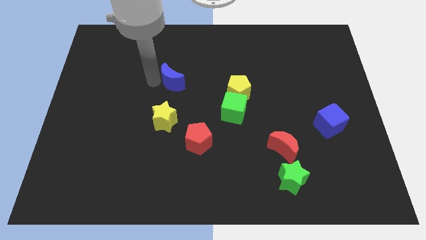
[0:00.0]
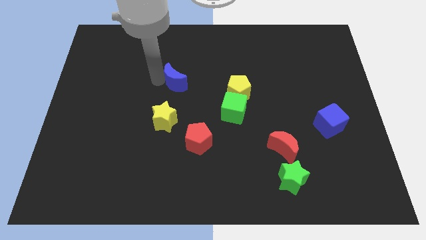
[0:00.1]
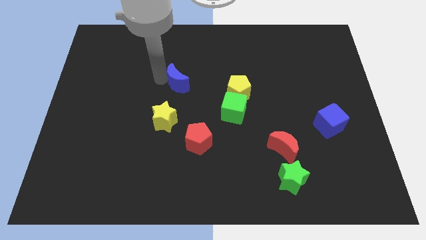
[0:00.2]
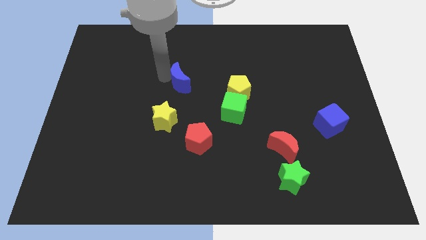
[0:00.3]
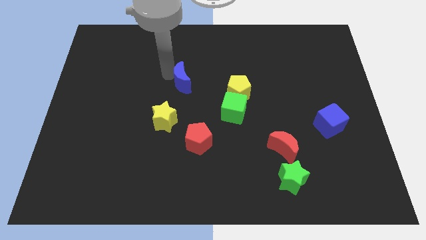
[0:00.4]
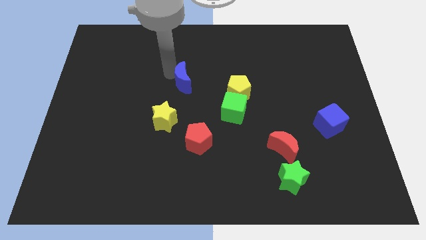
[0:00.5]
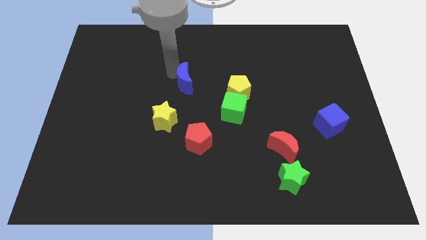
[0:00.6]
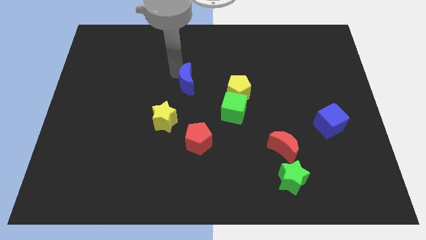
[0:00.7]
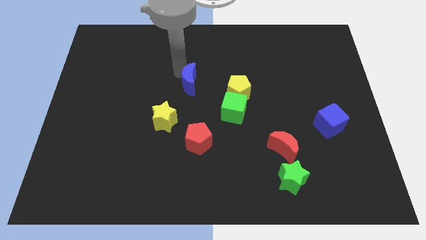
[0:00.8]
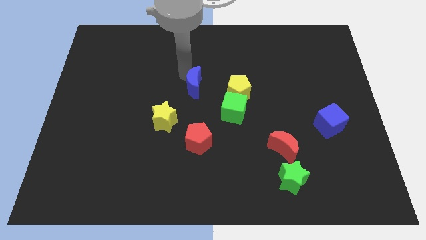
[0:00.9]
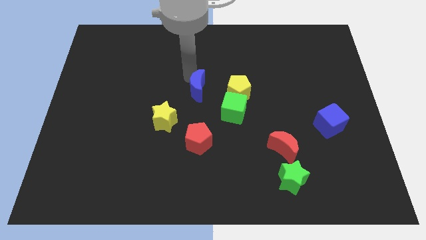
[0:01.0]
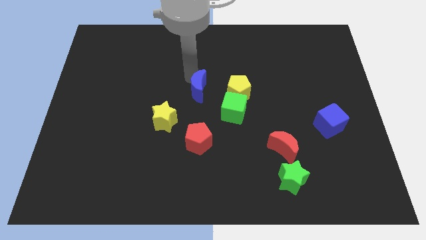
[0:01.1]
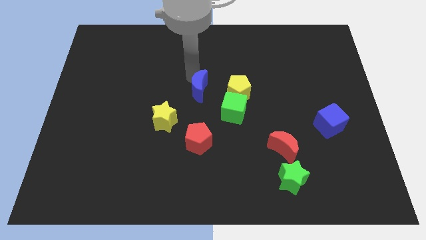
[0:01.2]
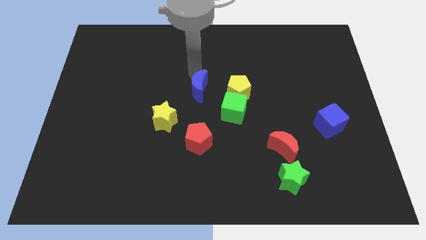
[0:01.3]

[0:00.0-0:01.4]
move the blue crescent diagonally top right to the yellow star

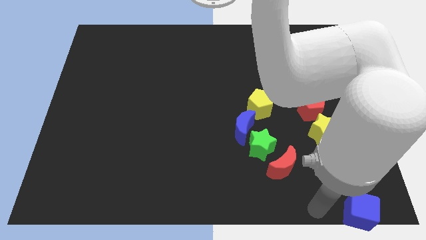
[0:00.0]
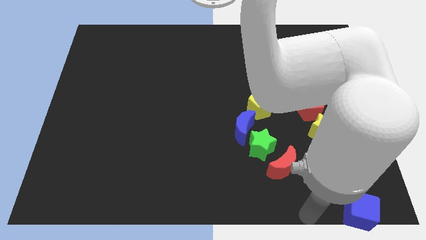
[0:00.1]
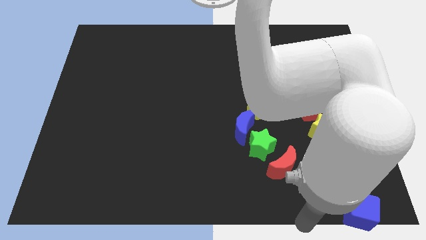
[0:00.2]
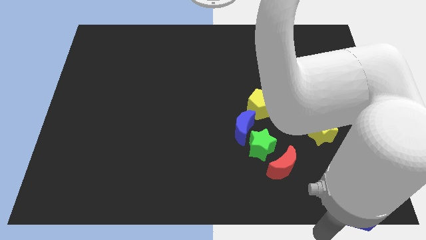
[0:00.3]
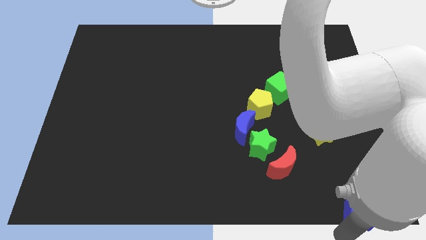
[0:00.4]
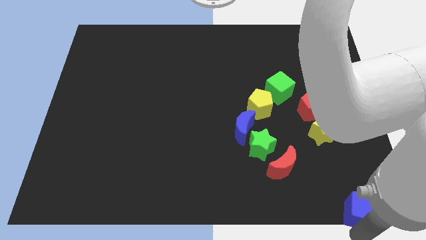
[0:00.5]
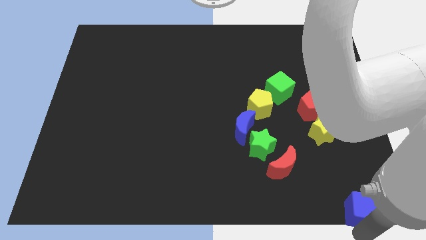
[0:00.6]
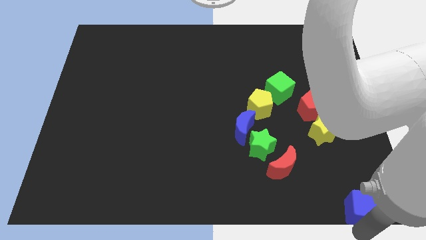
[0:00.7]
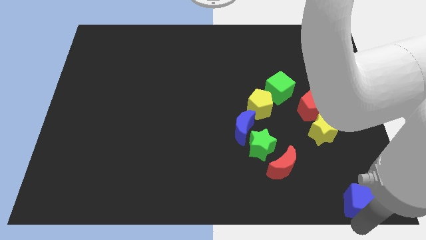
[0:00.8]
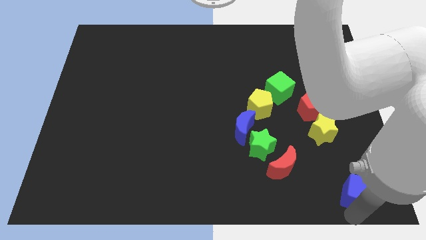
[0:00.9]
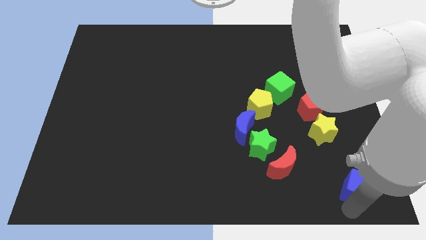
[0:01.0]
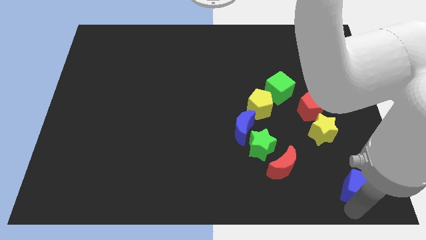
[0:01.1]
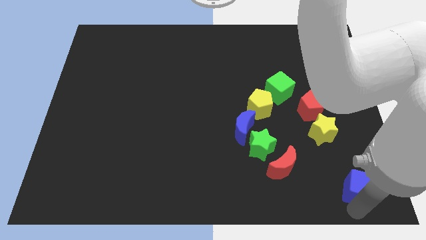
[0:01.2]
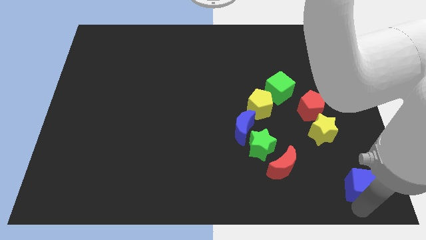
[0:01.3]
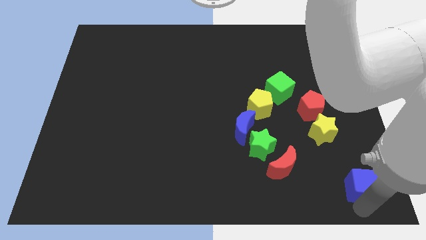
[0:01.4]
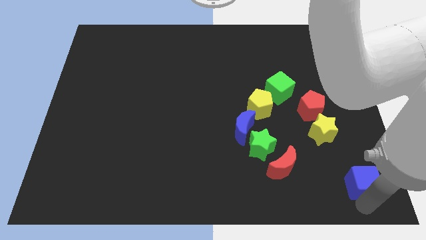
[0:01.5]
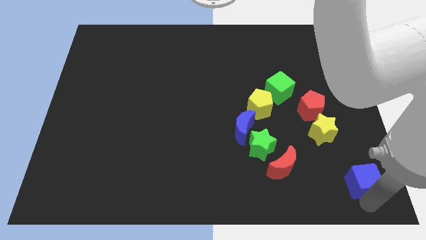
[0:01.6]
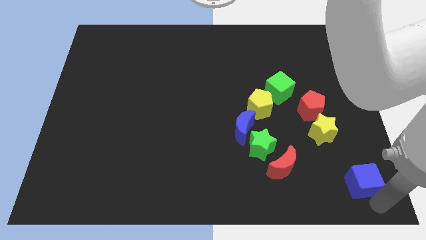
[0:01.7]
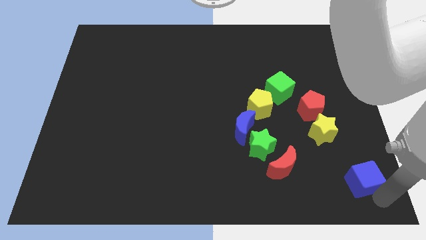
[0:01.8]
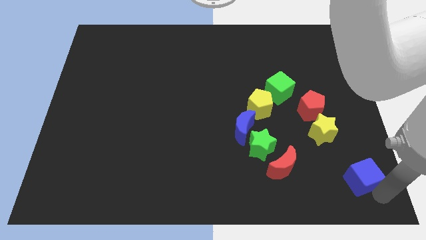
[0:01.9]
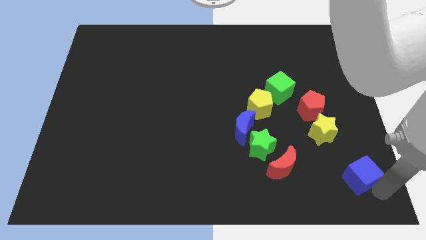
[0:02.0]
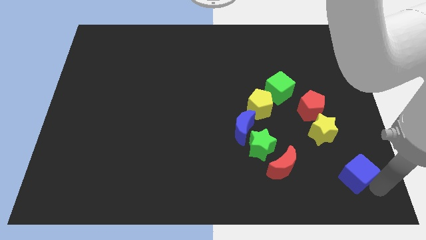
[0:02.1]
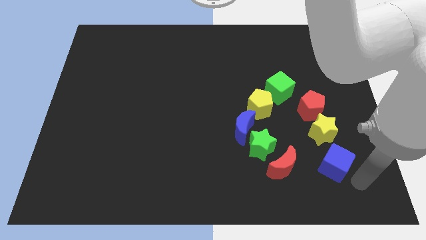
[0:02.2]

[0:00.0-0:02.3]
move the blue cube below yellow star

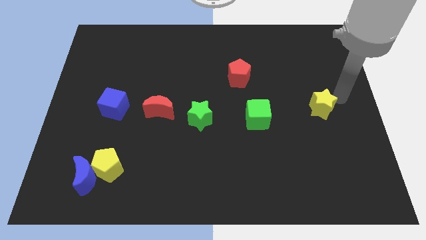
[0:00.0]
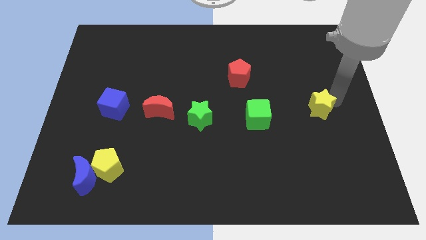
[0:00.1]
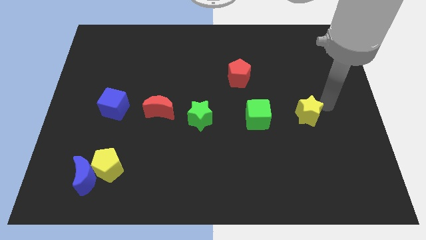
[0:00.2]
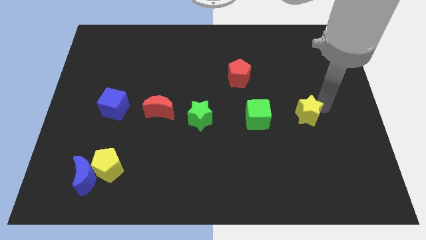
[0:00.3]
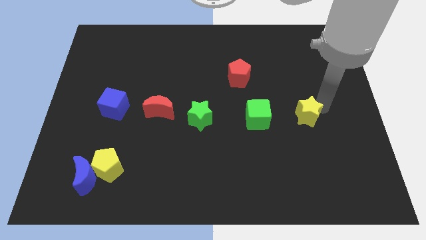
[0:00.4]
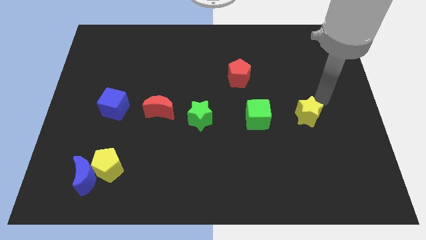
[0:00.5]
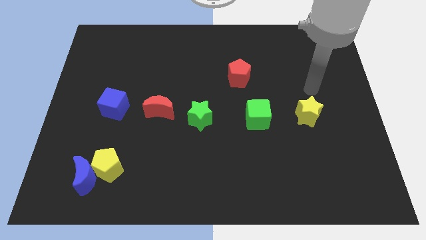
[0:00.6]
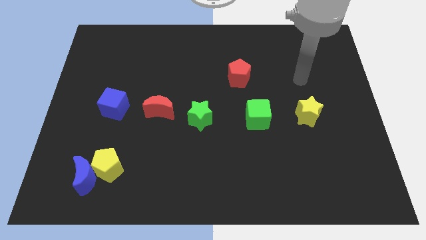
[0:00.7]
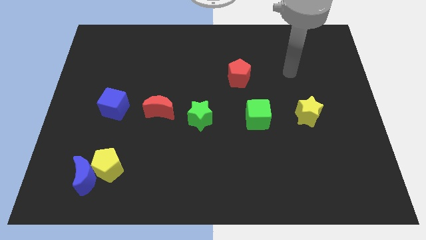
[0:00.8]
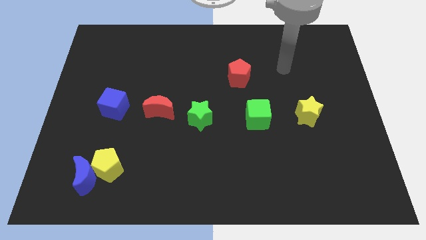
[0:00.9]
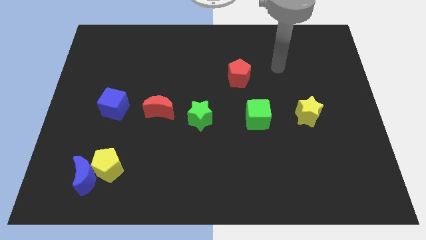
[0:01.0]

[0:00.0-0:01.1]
place yellow star to the right of green cube

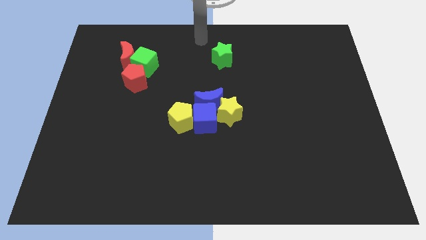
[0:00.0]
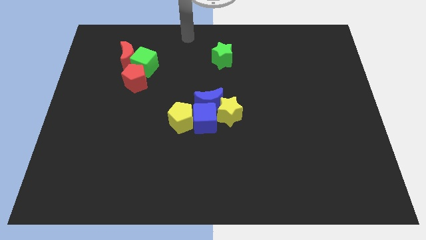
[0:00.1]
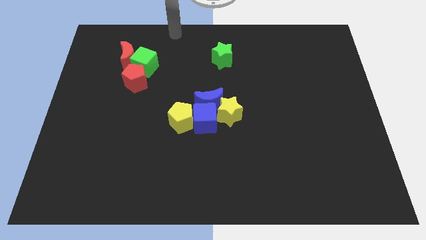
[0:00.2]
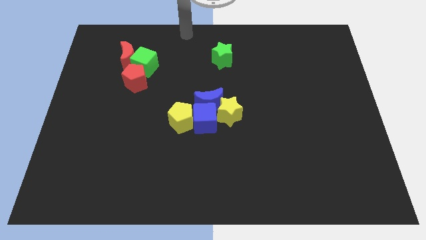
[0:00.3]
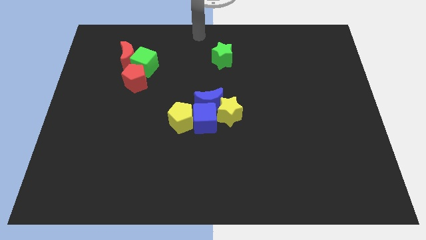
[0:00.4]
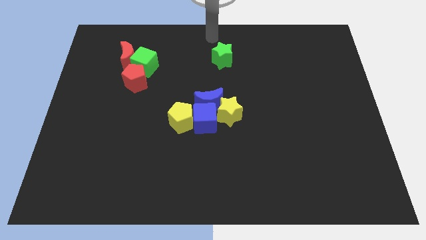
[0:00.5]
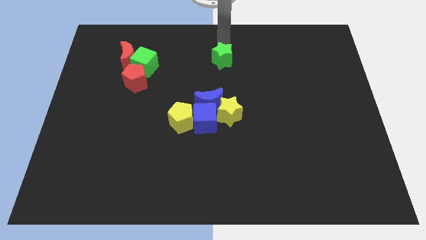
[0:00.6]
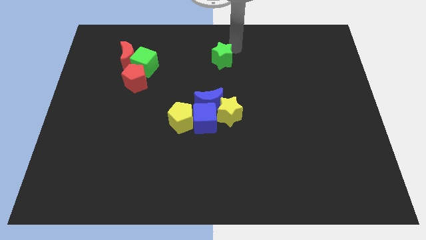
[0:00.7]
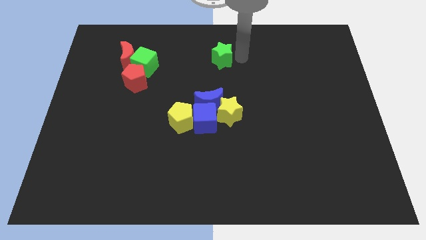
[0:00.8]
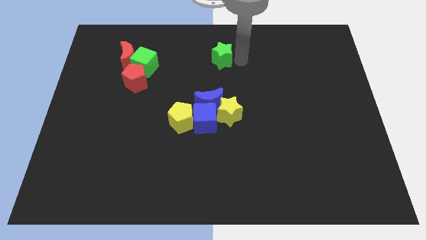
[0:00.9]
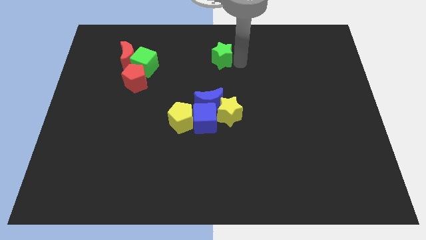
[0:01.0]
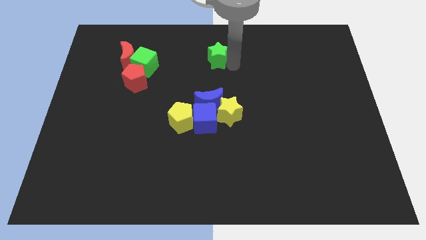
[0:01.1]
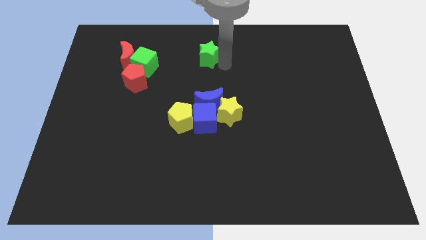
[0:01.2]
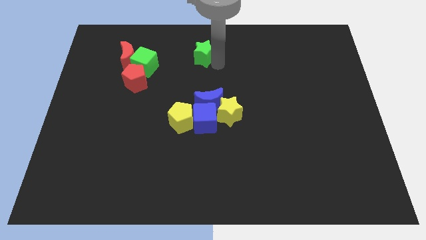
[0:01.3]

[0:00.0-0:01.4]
push the green star slightly to the left

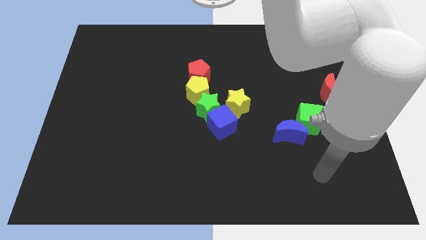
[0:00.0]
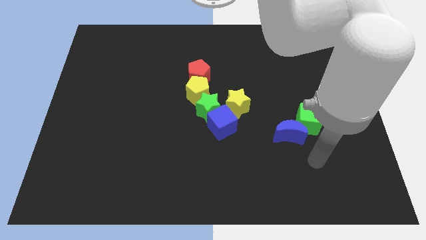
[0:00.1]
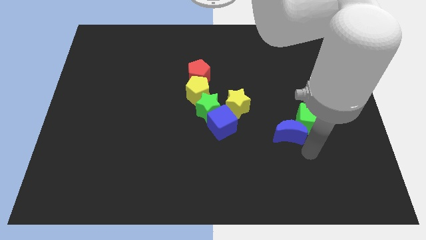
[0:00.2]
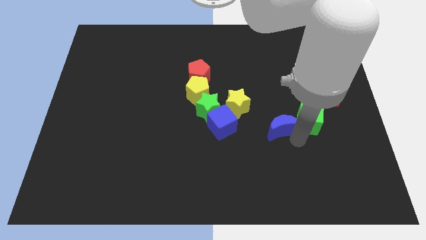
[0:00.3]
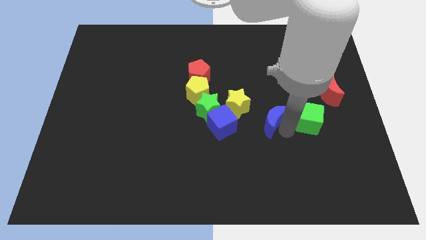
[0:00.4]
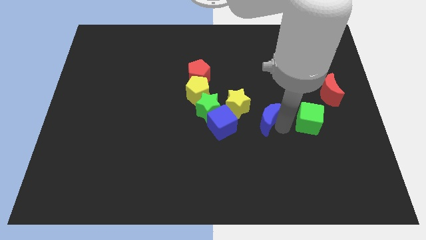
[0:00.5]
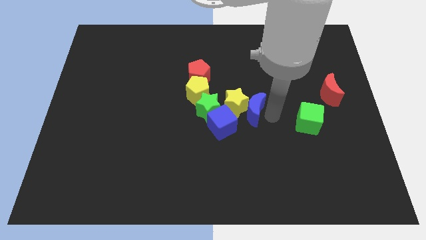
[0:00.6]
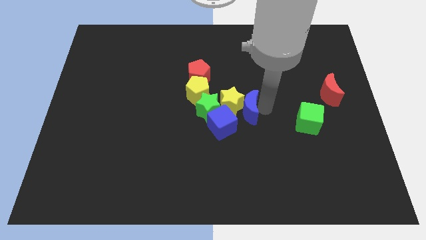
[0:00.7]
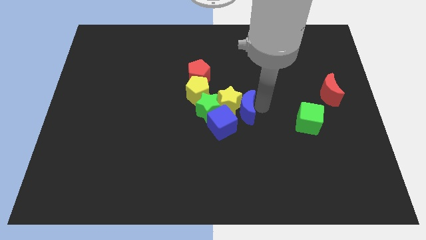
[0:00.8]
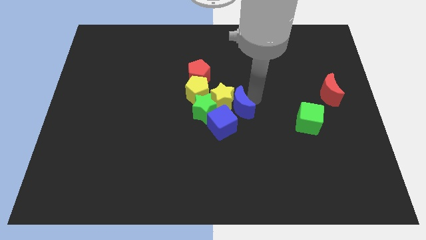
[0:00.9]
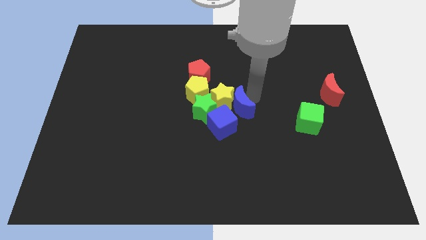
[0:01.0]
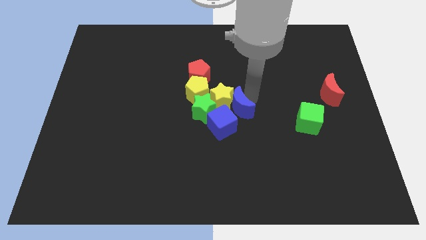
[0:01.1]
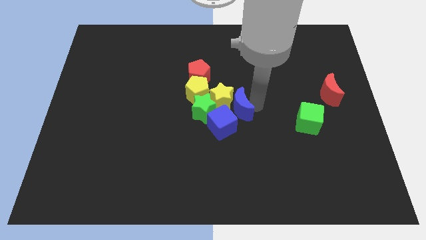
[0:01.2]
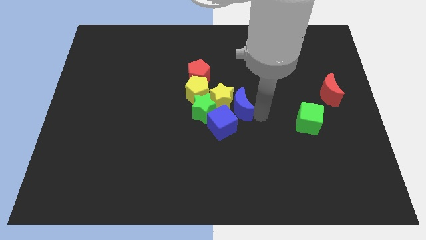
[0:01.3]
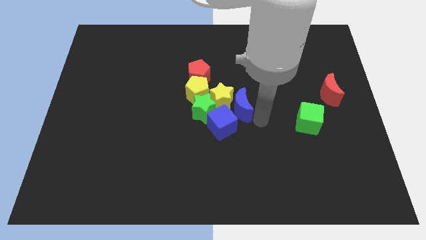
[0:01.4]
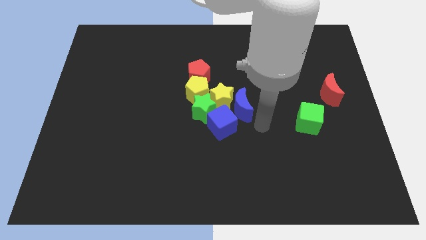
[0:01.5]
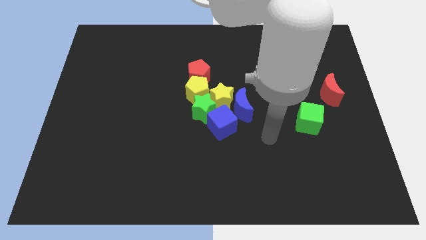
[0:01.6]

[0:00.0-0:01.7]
push the blue crescent into the group of blocks at the center of the board

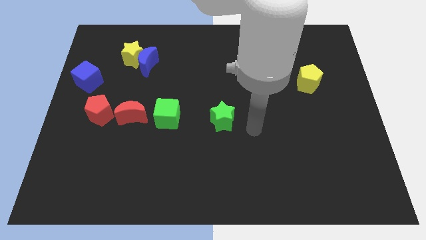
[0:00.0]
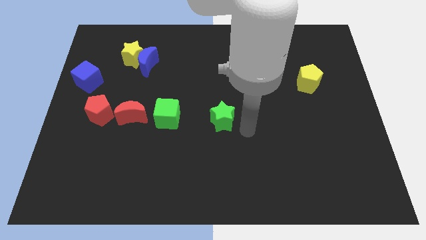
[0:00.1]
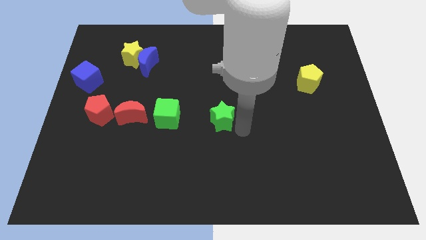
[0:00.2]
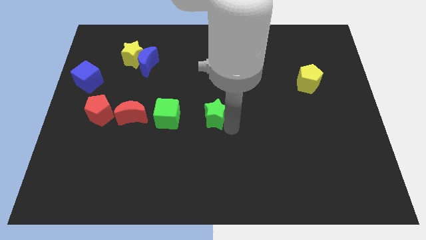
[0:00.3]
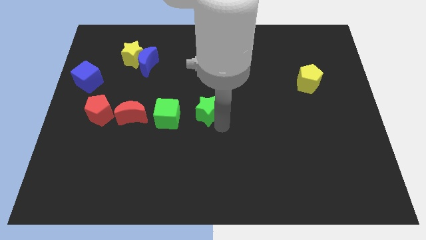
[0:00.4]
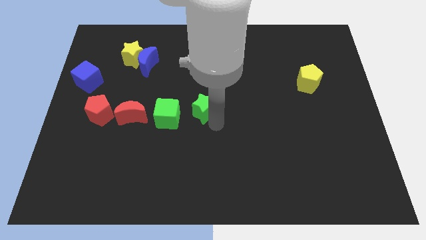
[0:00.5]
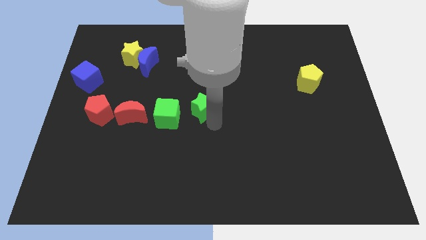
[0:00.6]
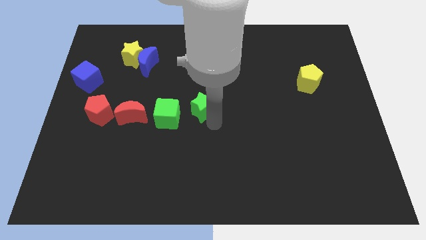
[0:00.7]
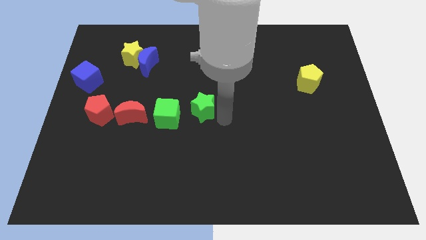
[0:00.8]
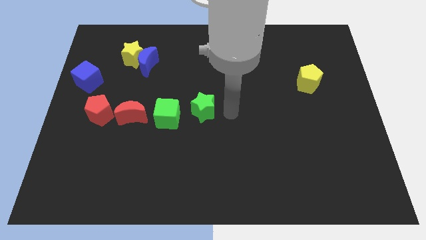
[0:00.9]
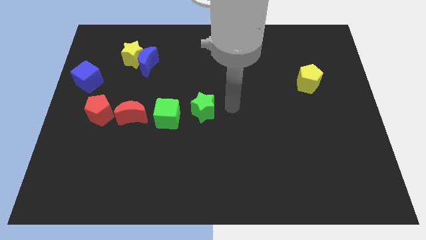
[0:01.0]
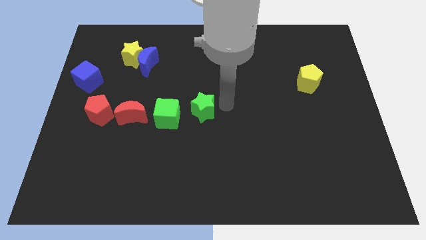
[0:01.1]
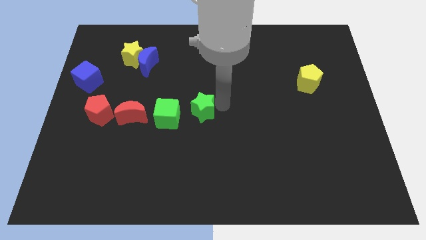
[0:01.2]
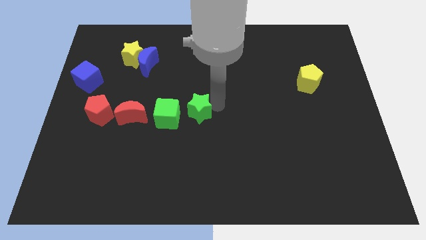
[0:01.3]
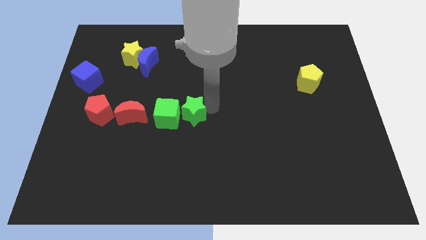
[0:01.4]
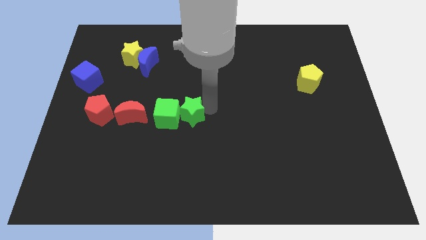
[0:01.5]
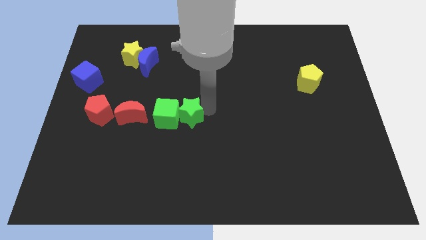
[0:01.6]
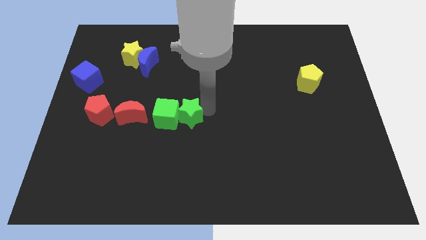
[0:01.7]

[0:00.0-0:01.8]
push green star beside green cube
